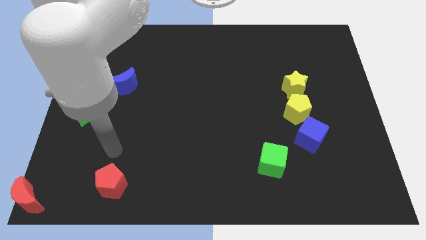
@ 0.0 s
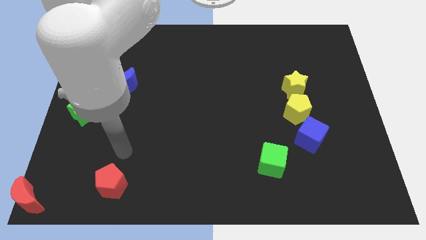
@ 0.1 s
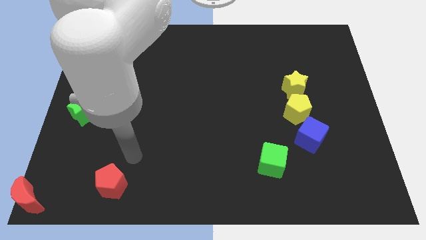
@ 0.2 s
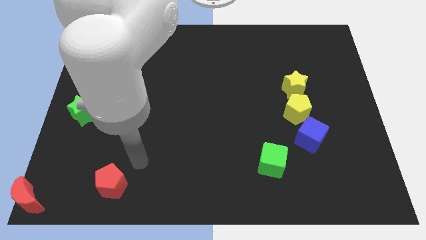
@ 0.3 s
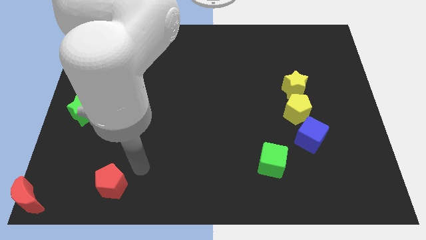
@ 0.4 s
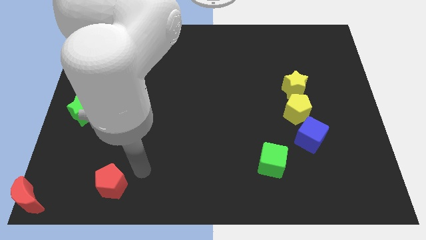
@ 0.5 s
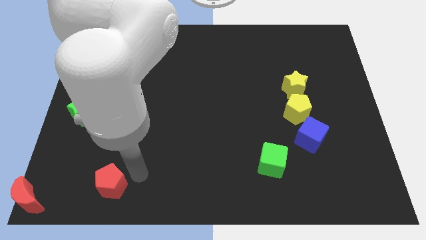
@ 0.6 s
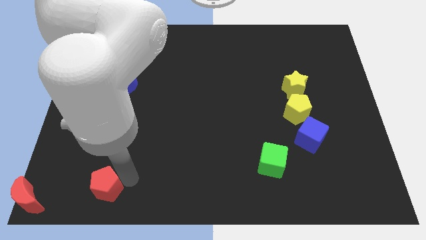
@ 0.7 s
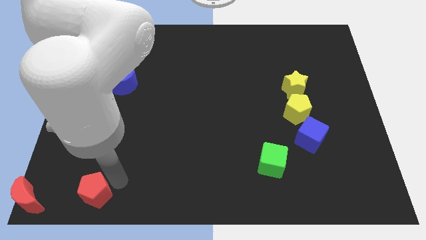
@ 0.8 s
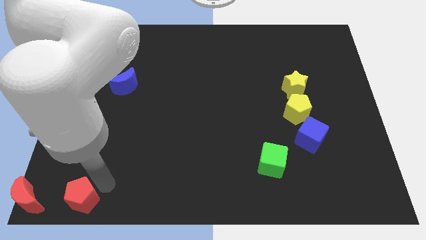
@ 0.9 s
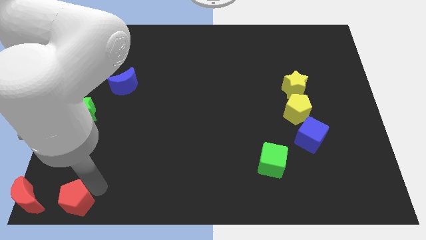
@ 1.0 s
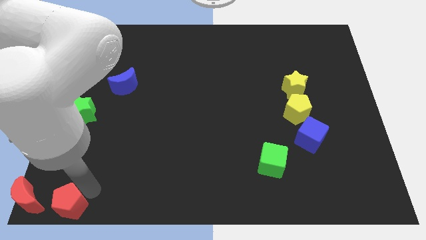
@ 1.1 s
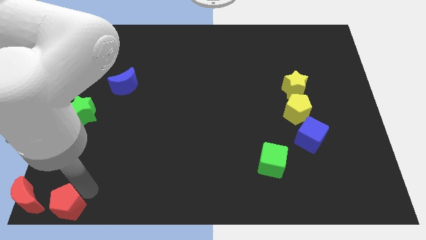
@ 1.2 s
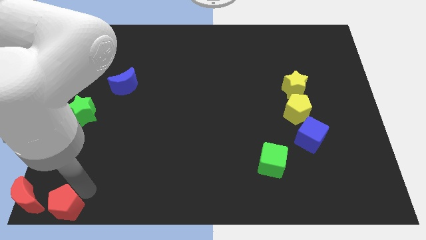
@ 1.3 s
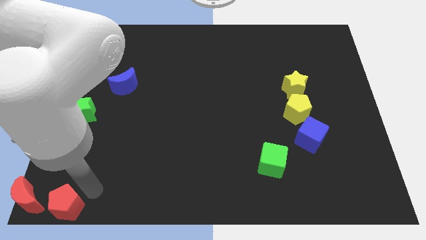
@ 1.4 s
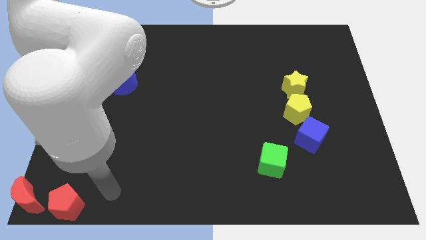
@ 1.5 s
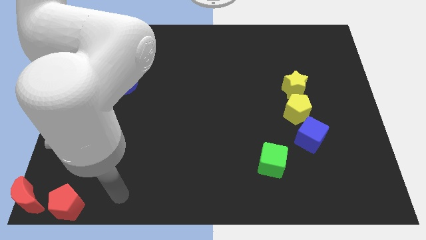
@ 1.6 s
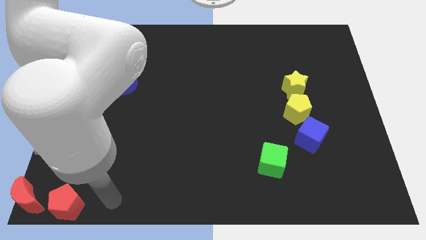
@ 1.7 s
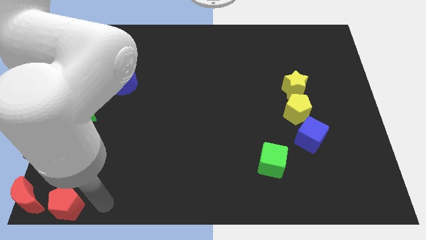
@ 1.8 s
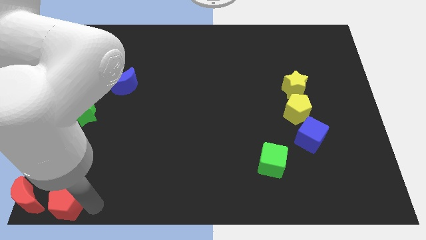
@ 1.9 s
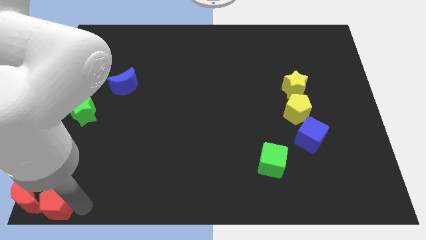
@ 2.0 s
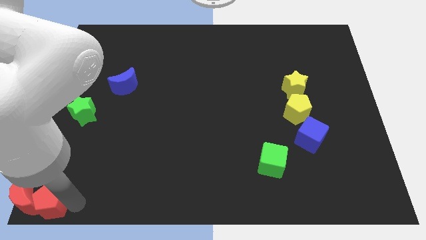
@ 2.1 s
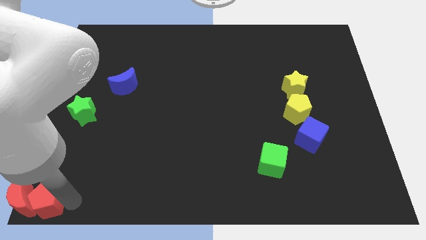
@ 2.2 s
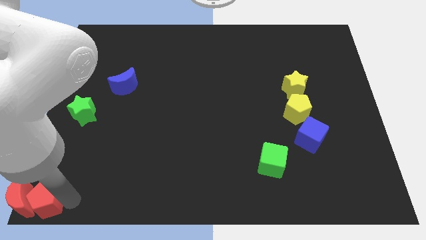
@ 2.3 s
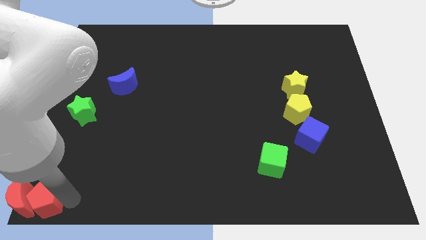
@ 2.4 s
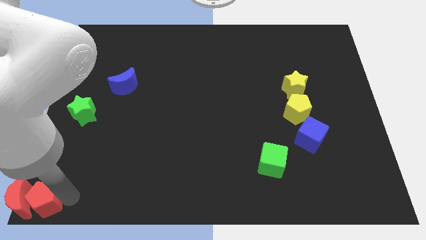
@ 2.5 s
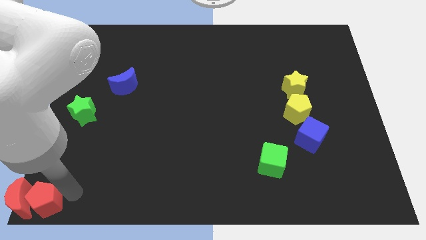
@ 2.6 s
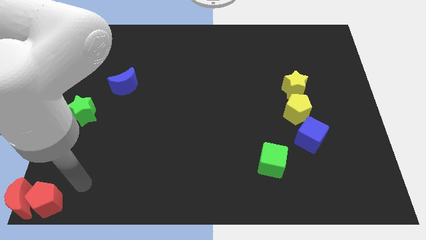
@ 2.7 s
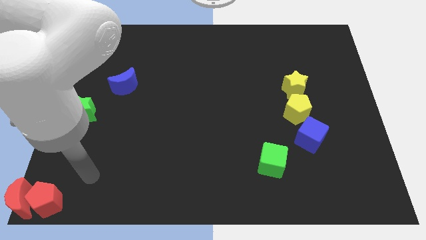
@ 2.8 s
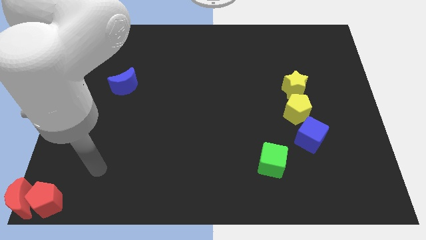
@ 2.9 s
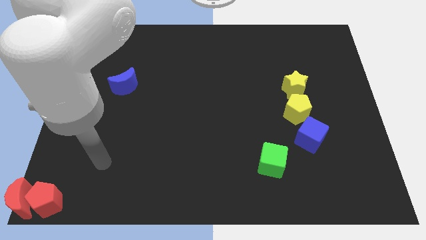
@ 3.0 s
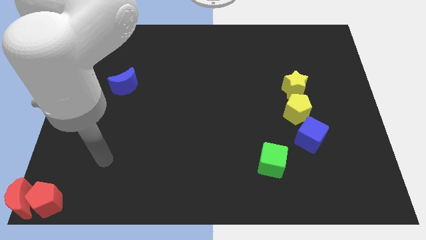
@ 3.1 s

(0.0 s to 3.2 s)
slide red pentagon into red moon

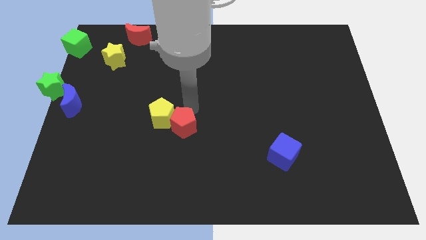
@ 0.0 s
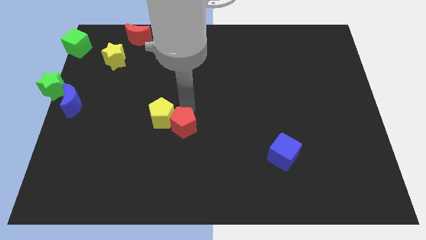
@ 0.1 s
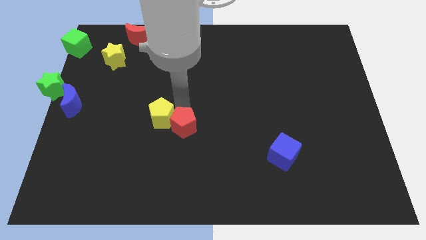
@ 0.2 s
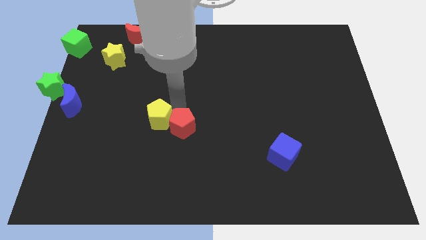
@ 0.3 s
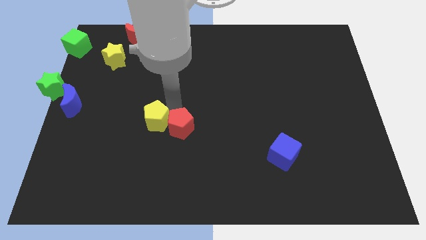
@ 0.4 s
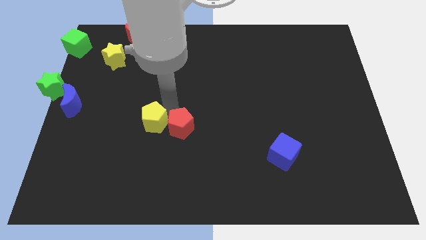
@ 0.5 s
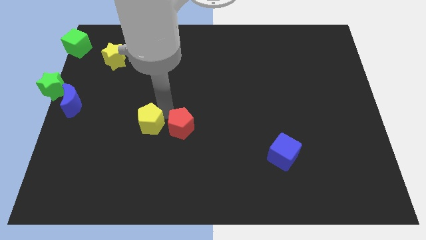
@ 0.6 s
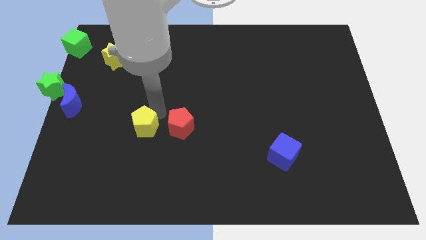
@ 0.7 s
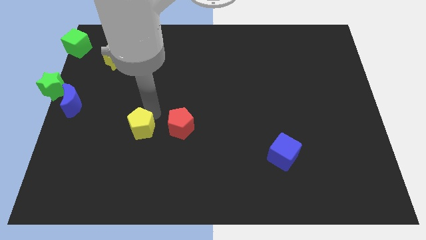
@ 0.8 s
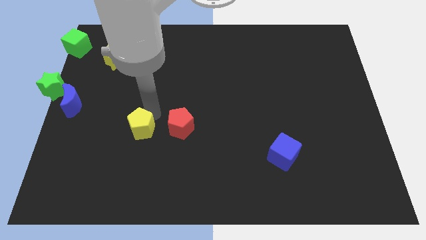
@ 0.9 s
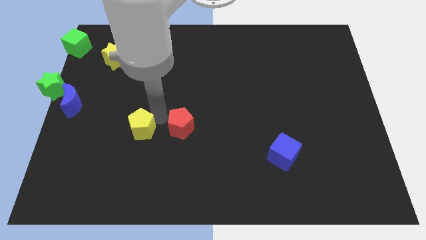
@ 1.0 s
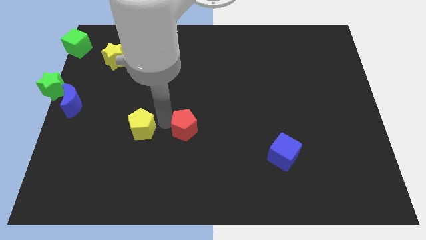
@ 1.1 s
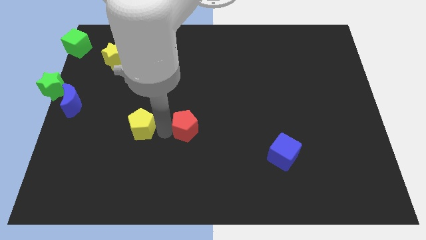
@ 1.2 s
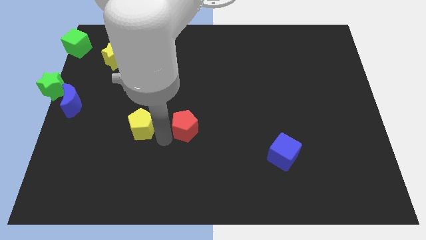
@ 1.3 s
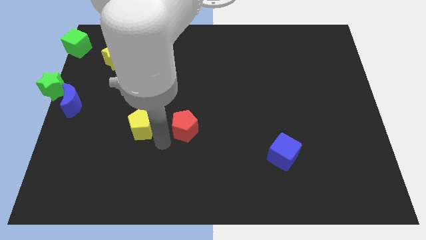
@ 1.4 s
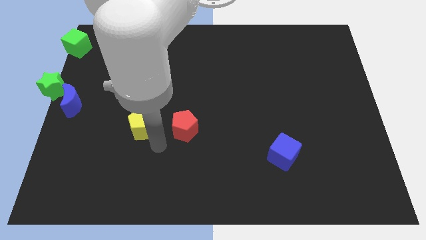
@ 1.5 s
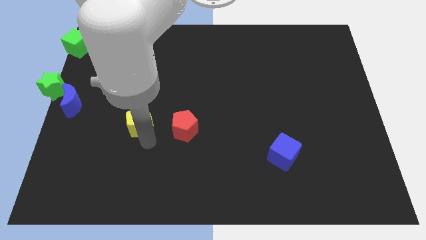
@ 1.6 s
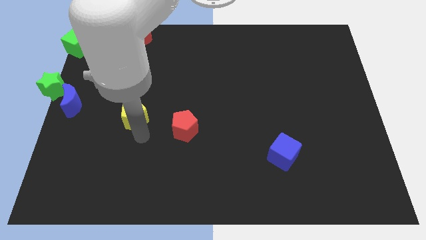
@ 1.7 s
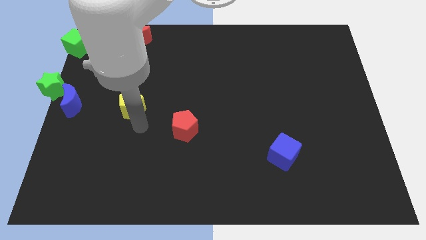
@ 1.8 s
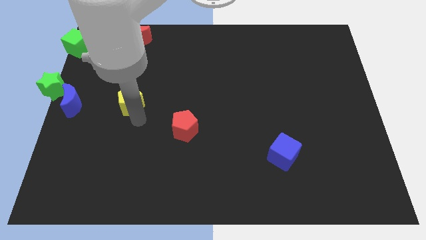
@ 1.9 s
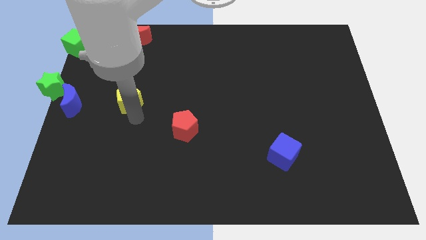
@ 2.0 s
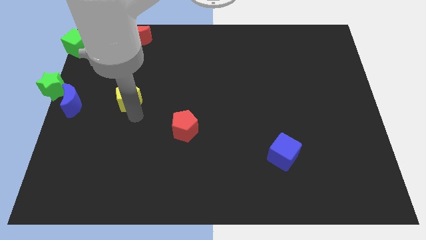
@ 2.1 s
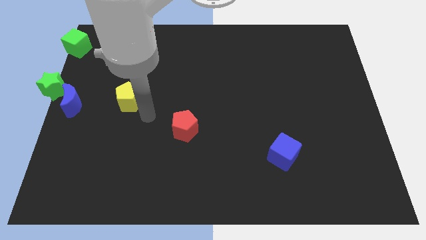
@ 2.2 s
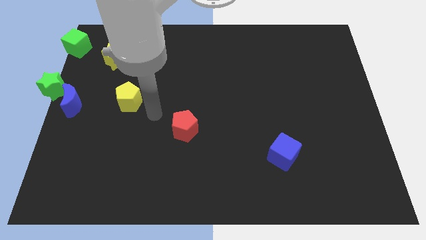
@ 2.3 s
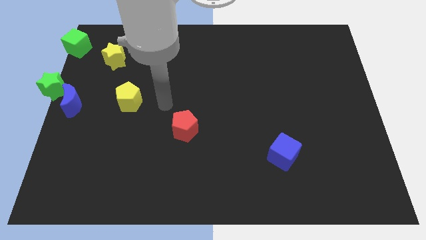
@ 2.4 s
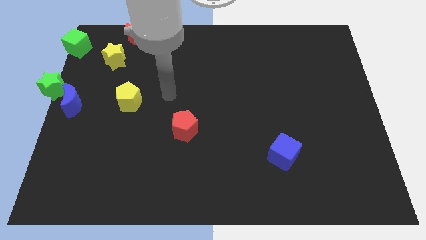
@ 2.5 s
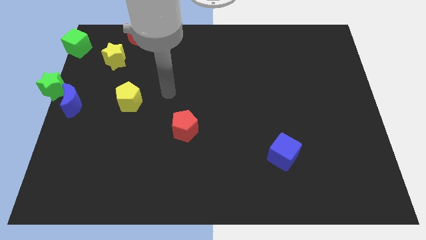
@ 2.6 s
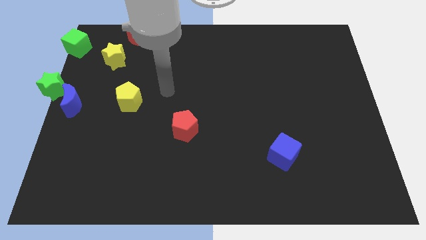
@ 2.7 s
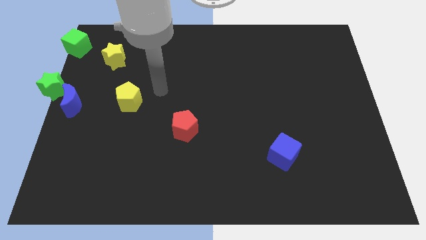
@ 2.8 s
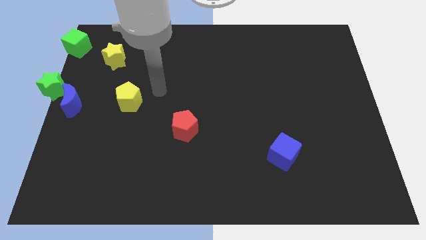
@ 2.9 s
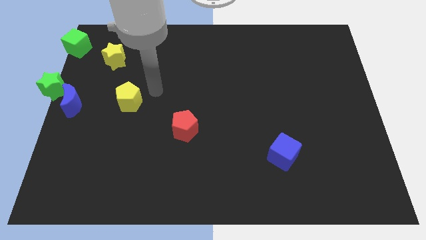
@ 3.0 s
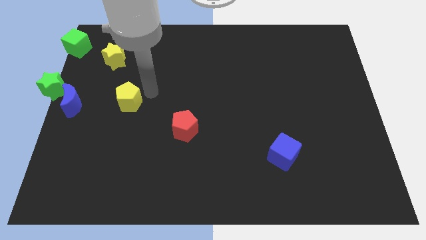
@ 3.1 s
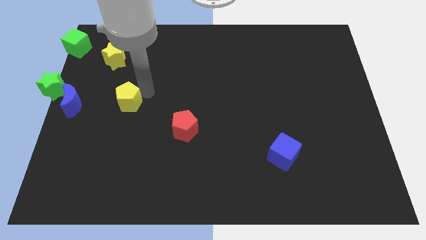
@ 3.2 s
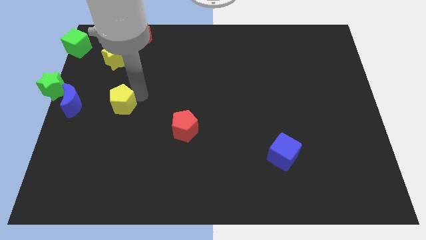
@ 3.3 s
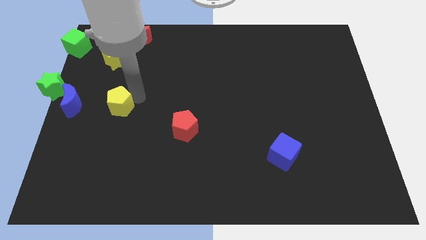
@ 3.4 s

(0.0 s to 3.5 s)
separate yellow pentagon from red pentagon

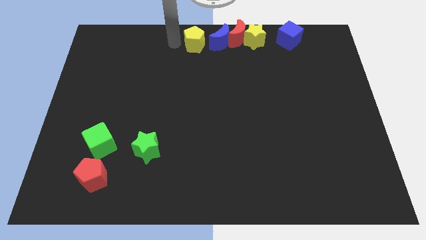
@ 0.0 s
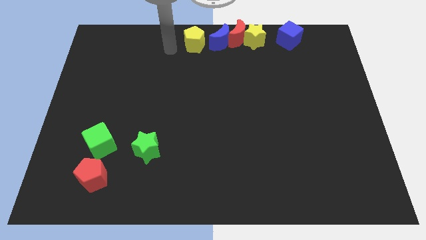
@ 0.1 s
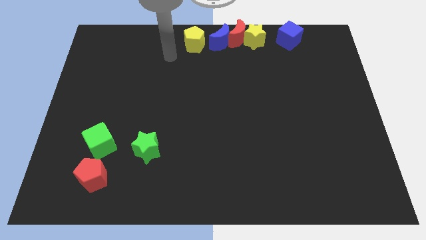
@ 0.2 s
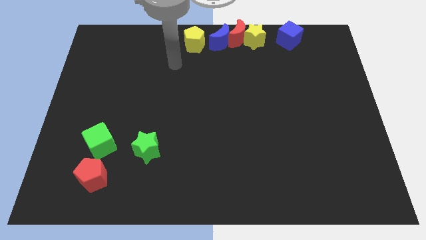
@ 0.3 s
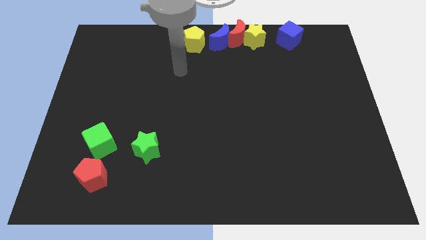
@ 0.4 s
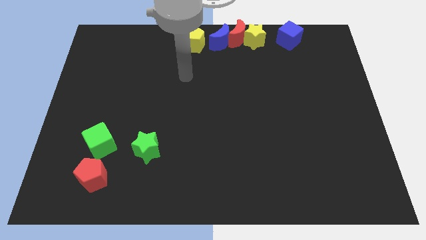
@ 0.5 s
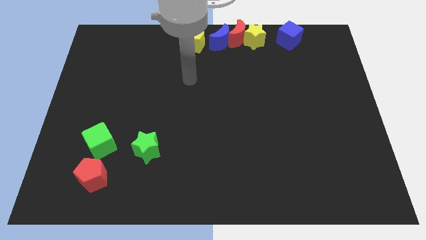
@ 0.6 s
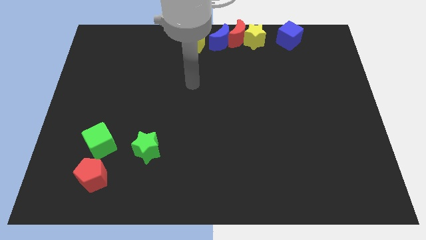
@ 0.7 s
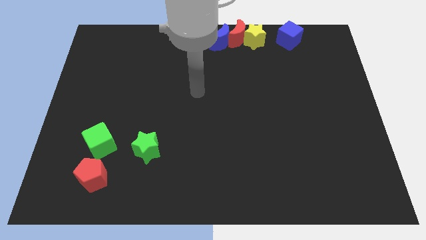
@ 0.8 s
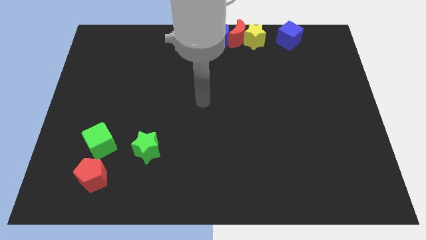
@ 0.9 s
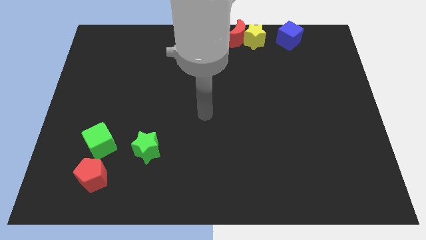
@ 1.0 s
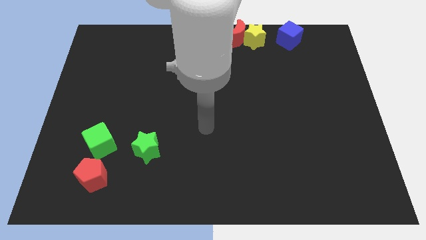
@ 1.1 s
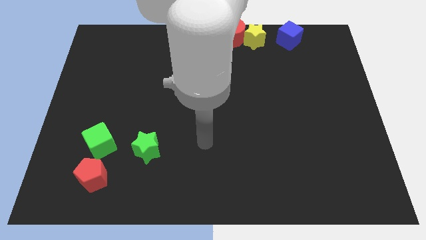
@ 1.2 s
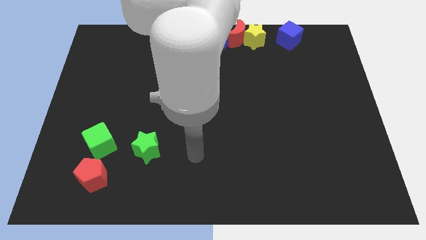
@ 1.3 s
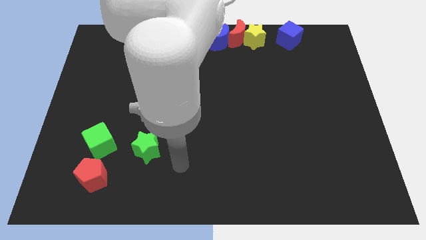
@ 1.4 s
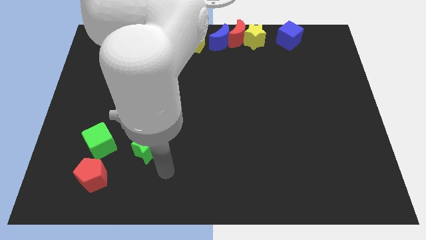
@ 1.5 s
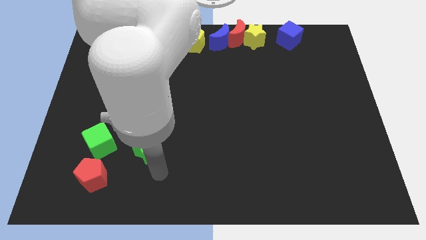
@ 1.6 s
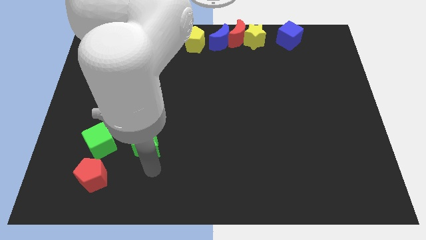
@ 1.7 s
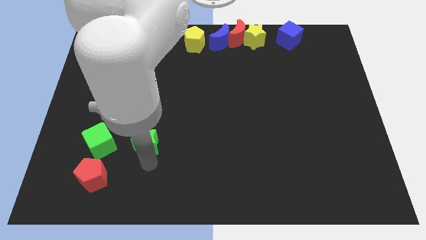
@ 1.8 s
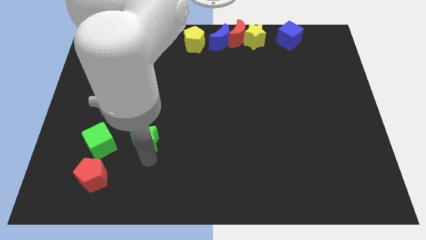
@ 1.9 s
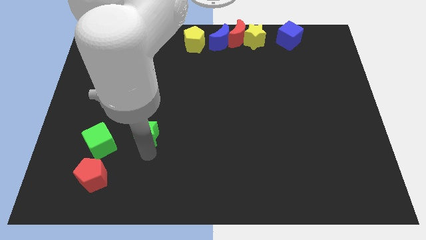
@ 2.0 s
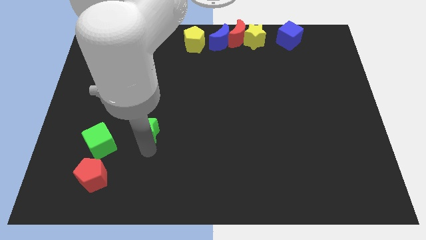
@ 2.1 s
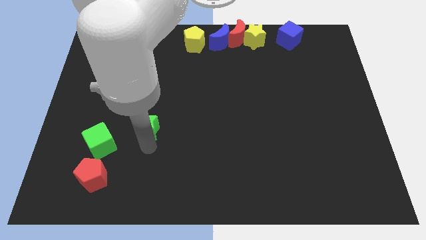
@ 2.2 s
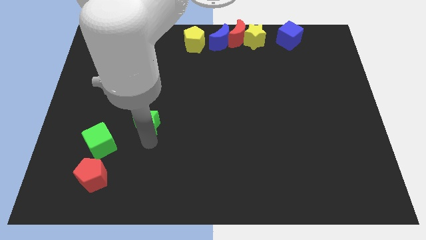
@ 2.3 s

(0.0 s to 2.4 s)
move the green star to top side of the board

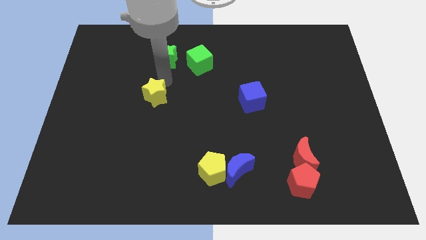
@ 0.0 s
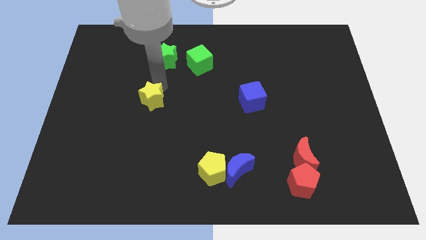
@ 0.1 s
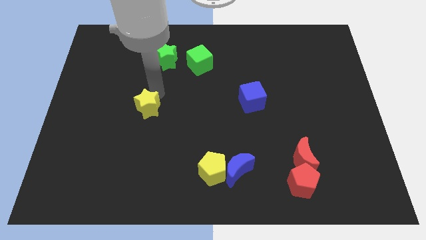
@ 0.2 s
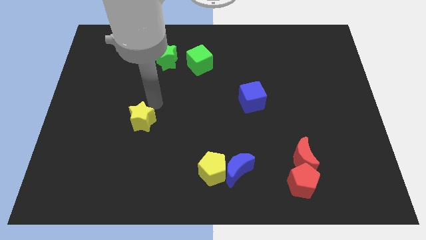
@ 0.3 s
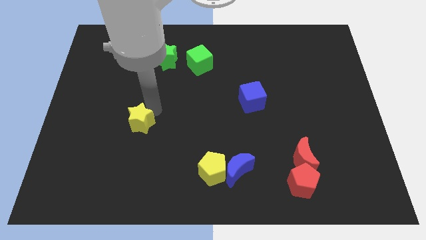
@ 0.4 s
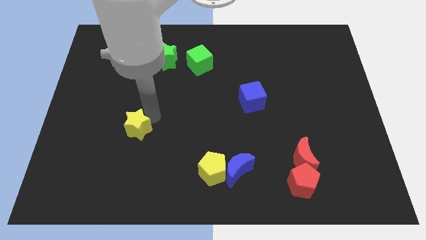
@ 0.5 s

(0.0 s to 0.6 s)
push the yellow star to the bottom side
